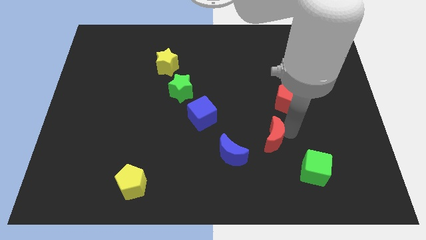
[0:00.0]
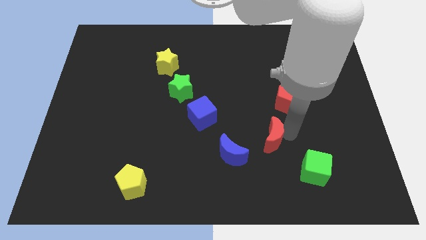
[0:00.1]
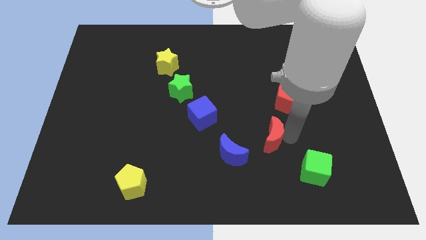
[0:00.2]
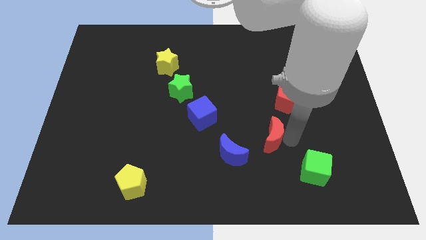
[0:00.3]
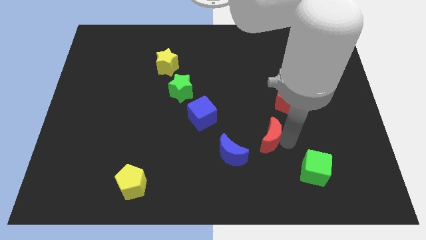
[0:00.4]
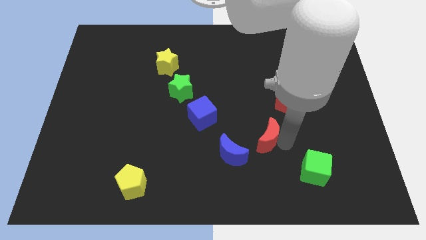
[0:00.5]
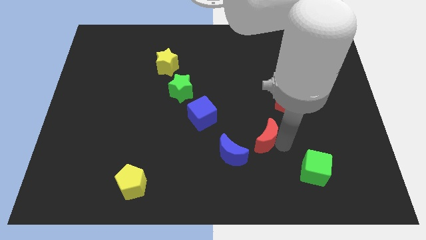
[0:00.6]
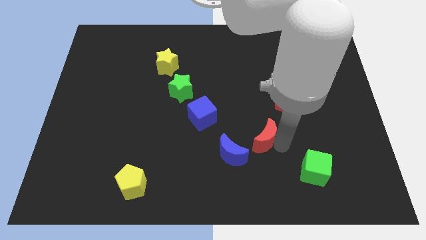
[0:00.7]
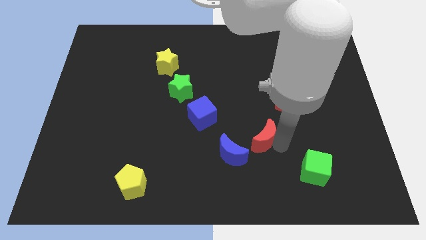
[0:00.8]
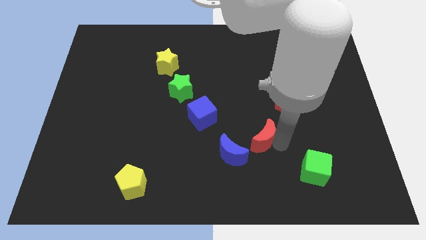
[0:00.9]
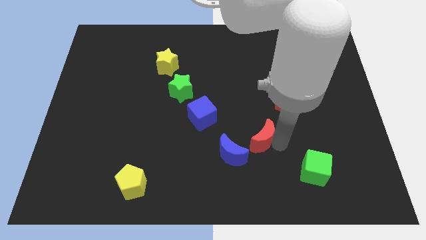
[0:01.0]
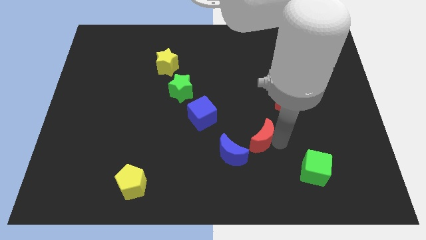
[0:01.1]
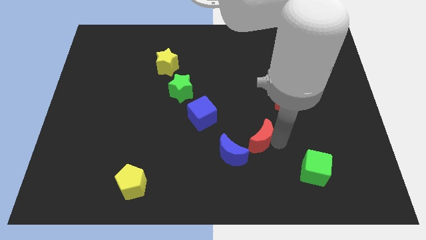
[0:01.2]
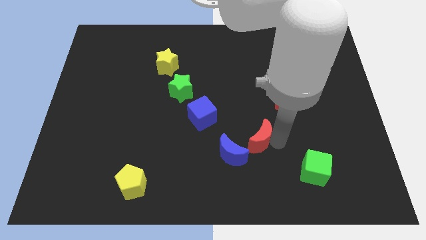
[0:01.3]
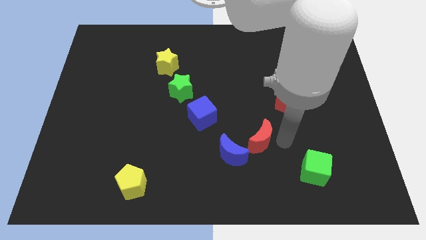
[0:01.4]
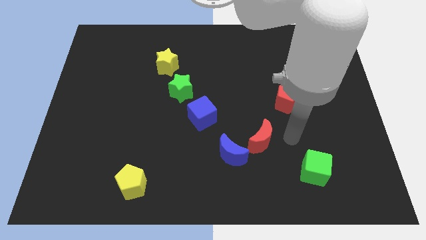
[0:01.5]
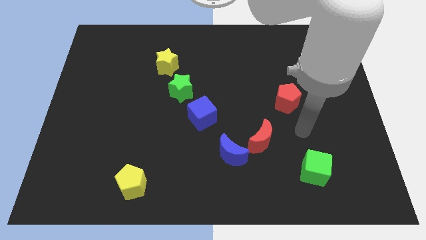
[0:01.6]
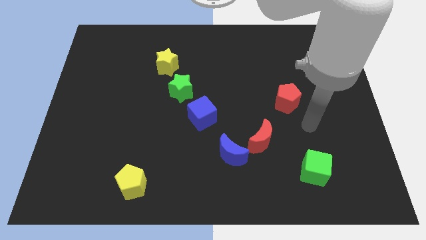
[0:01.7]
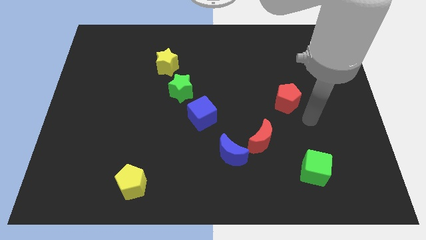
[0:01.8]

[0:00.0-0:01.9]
place the red moon at the right side of the blue crescent

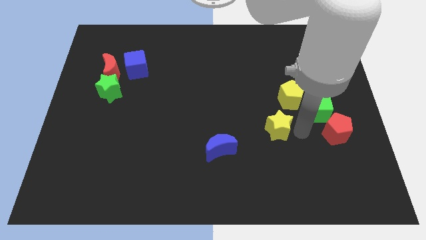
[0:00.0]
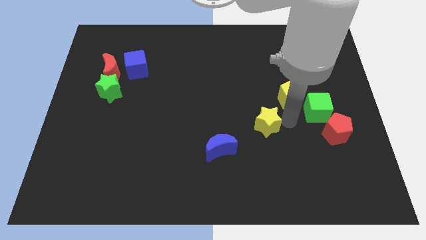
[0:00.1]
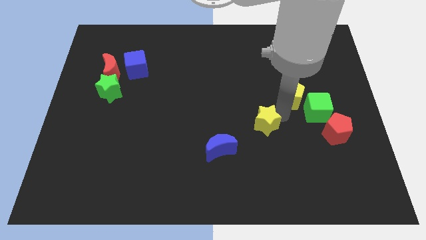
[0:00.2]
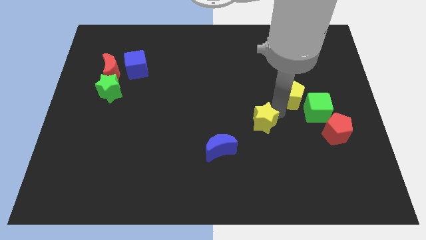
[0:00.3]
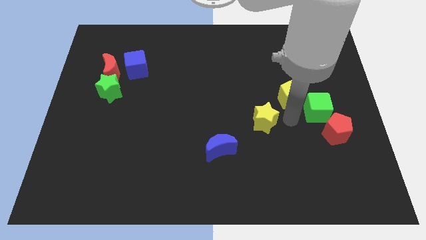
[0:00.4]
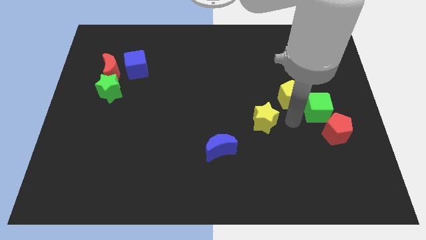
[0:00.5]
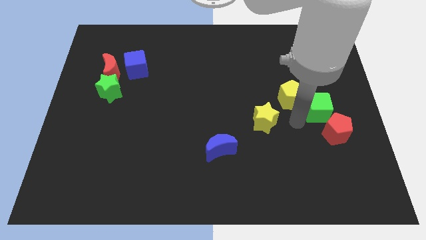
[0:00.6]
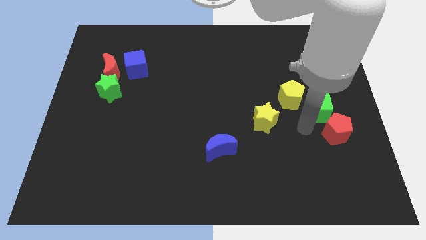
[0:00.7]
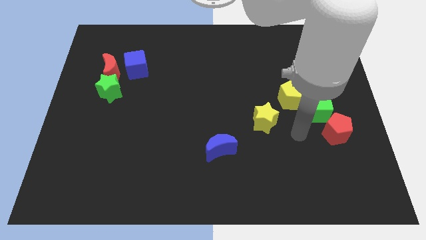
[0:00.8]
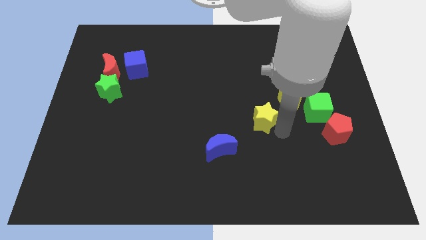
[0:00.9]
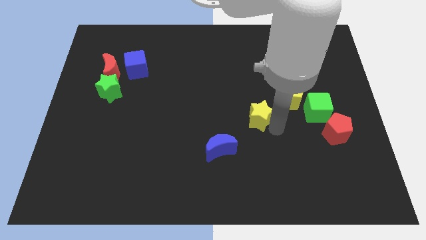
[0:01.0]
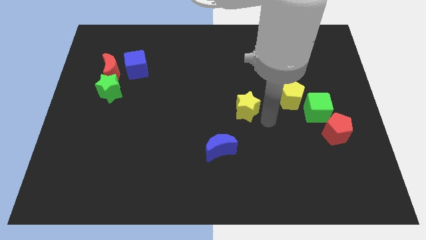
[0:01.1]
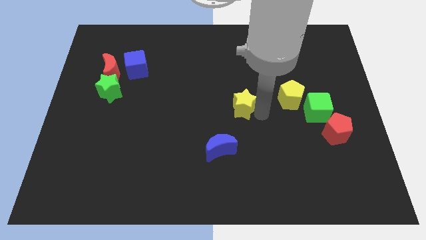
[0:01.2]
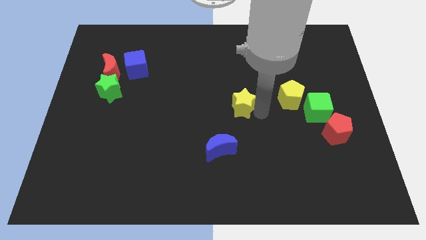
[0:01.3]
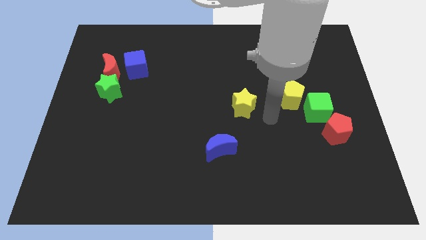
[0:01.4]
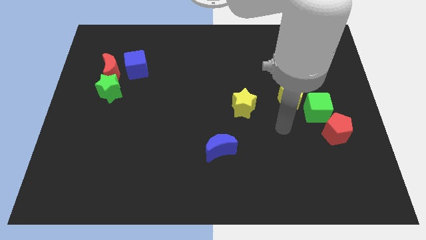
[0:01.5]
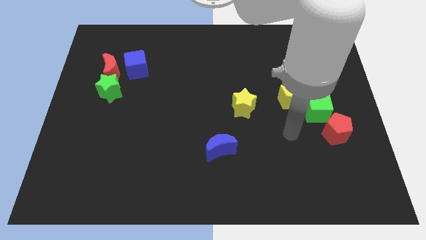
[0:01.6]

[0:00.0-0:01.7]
place the yellow star to the left side of the yellow pentagon

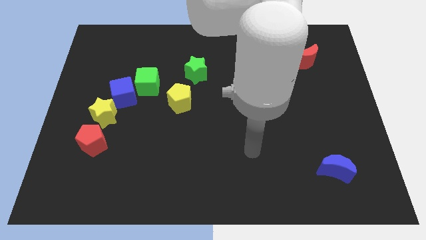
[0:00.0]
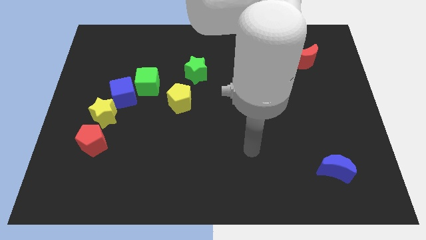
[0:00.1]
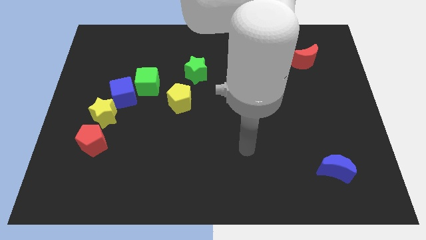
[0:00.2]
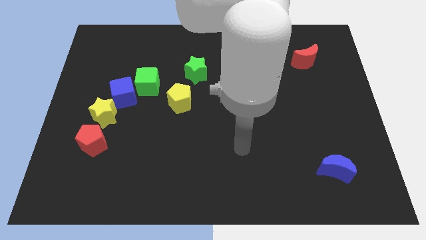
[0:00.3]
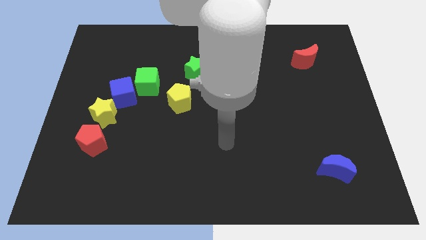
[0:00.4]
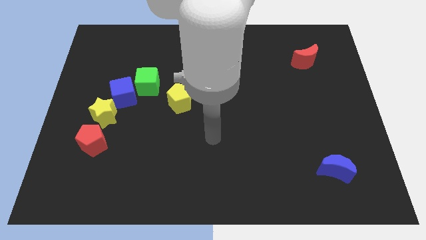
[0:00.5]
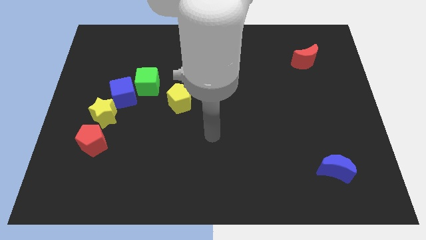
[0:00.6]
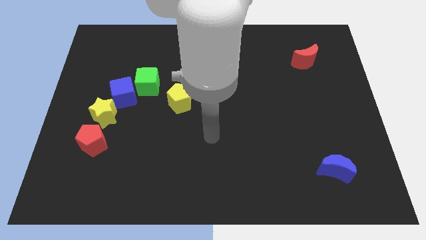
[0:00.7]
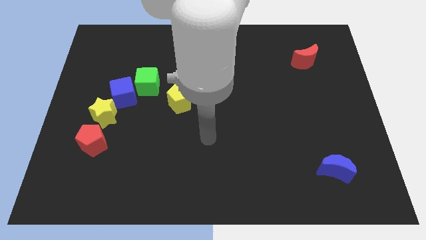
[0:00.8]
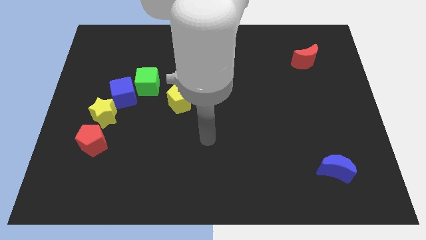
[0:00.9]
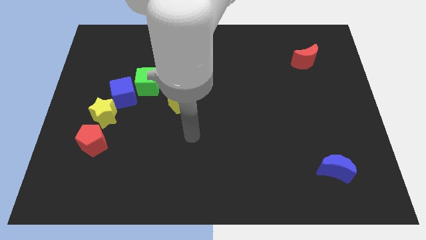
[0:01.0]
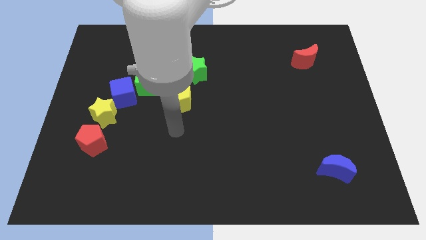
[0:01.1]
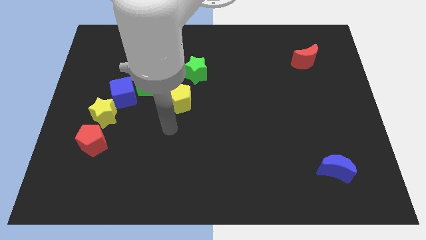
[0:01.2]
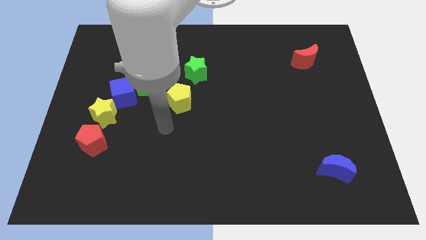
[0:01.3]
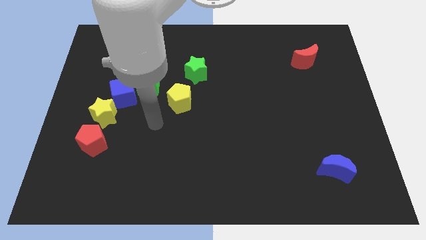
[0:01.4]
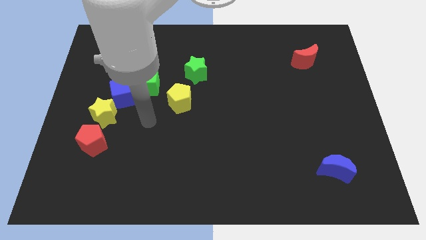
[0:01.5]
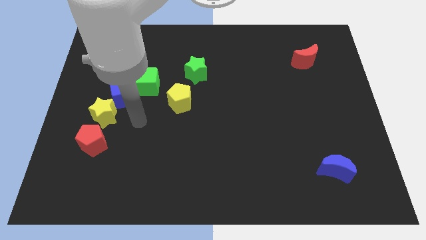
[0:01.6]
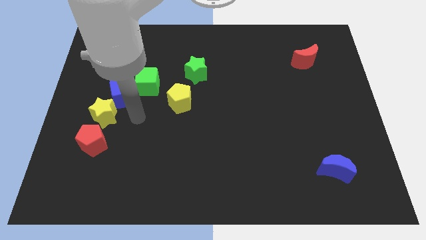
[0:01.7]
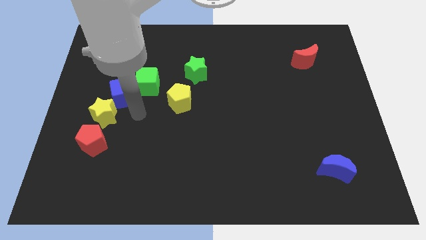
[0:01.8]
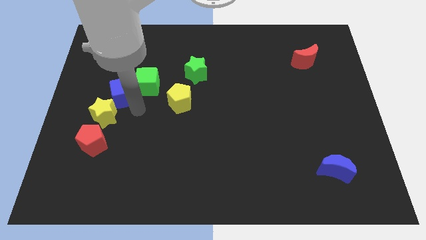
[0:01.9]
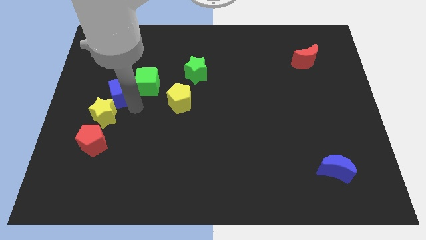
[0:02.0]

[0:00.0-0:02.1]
place your arm right to the blue cube

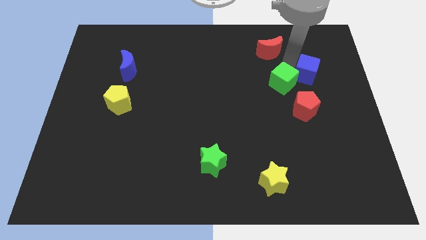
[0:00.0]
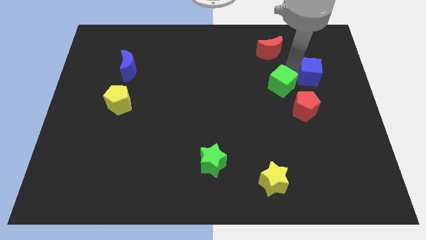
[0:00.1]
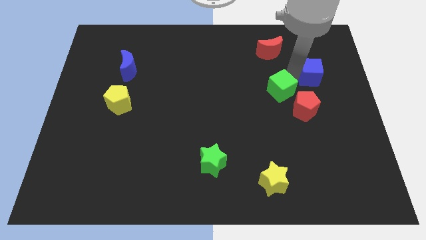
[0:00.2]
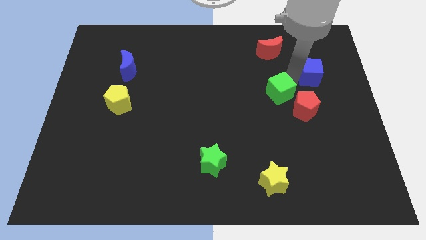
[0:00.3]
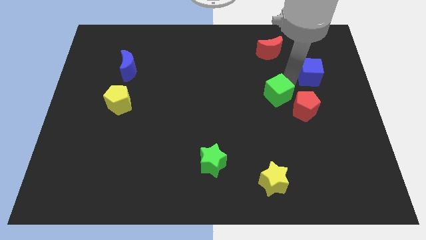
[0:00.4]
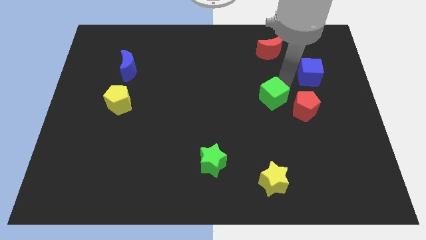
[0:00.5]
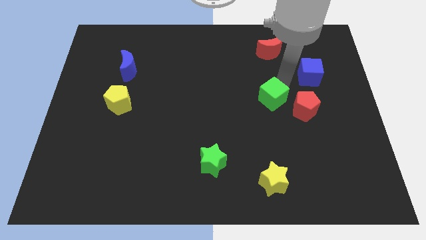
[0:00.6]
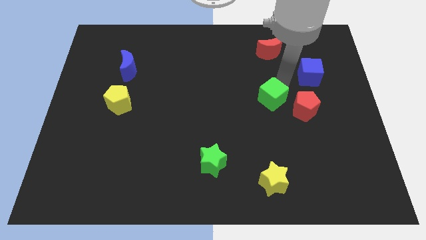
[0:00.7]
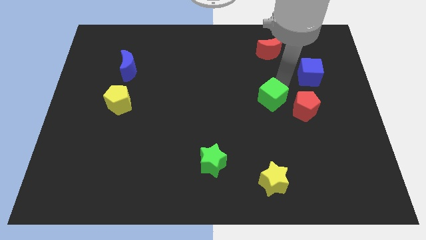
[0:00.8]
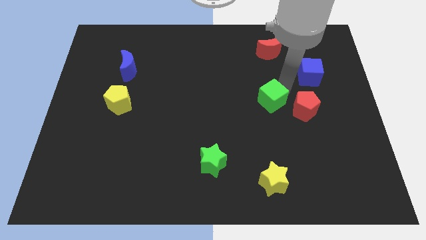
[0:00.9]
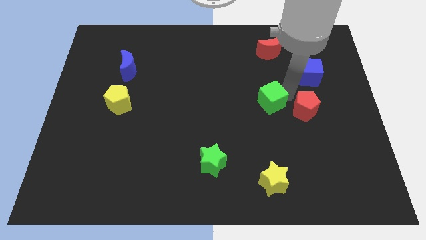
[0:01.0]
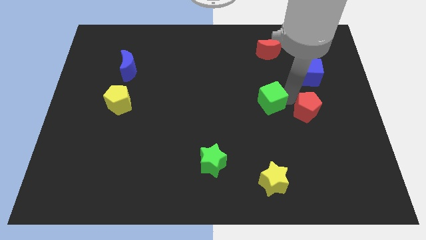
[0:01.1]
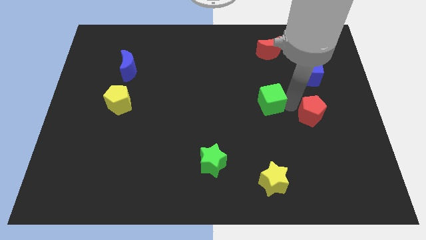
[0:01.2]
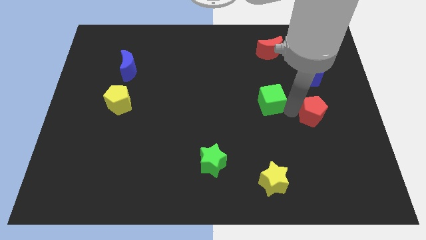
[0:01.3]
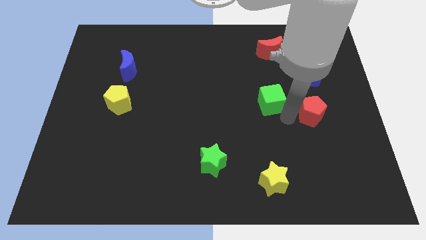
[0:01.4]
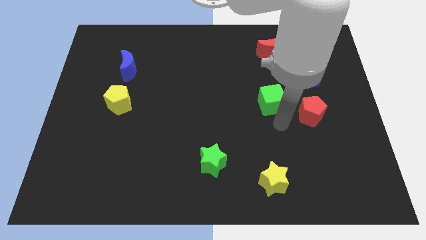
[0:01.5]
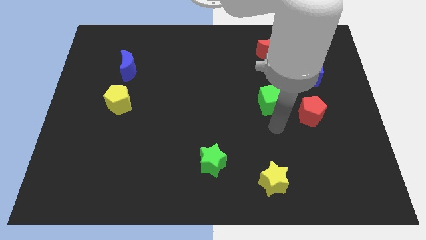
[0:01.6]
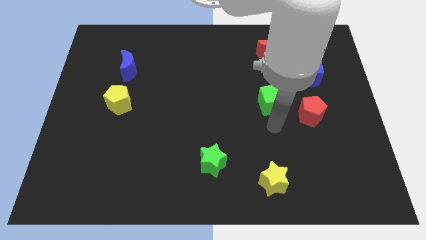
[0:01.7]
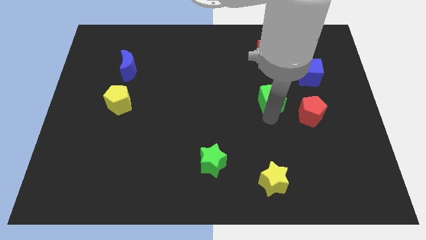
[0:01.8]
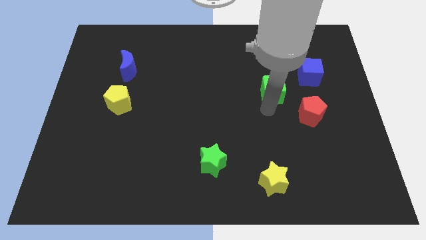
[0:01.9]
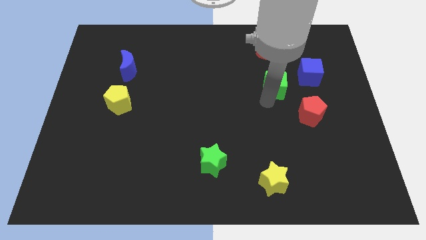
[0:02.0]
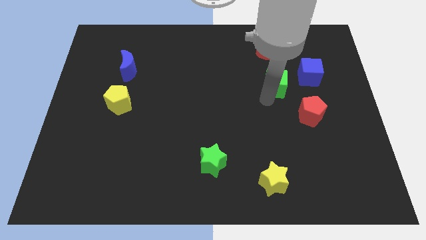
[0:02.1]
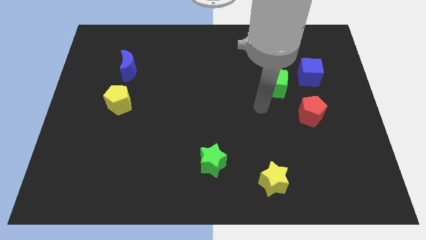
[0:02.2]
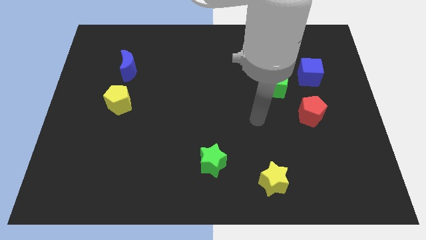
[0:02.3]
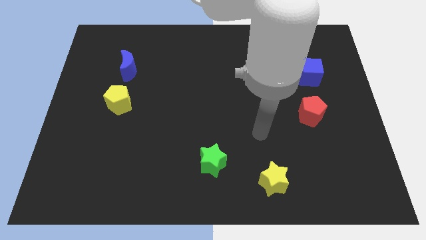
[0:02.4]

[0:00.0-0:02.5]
move the green cube diagonally top left to red pentagon

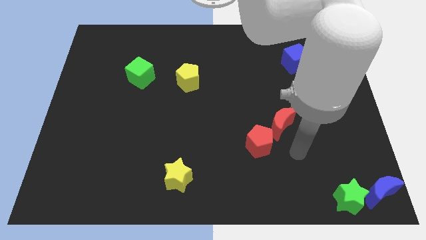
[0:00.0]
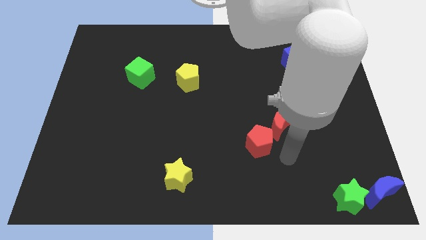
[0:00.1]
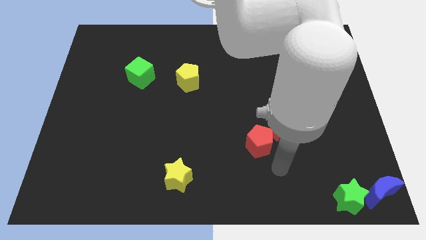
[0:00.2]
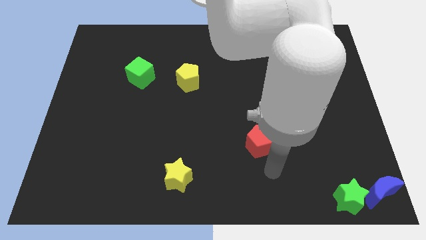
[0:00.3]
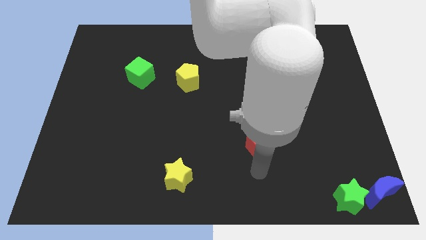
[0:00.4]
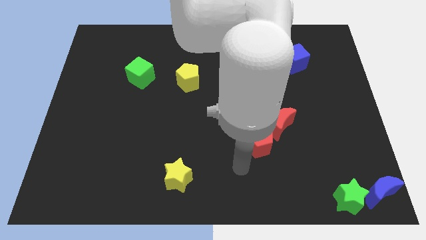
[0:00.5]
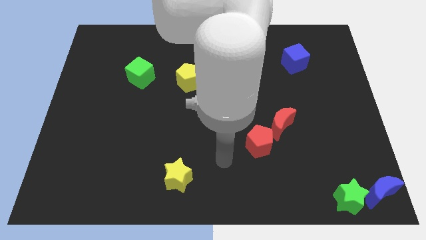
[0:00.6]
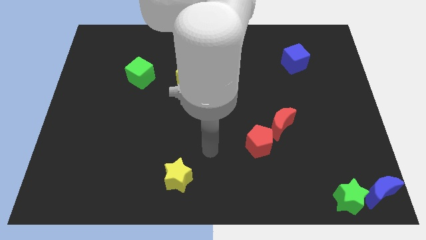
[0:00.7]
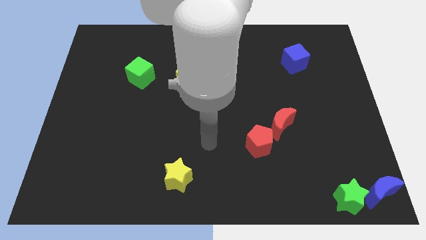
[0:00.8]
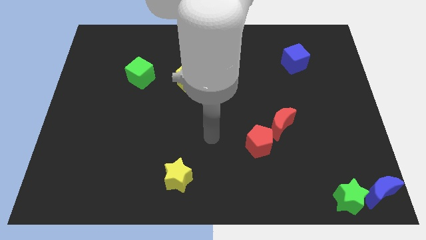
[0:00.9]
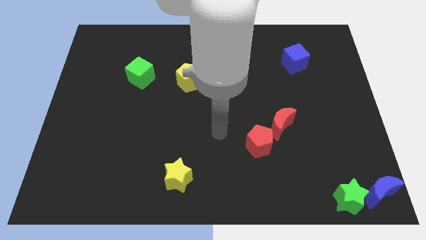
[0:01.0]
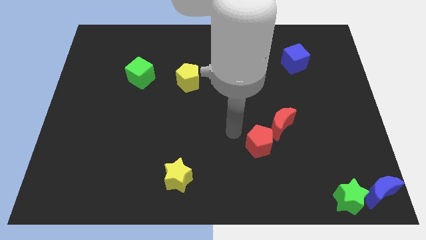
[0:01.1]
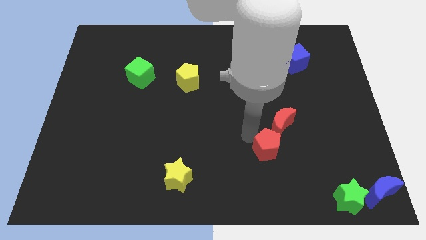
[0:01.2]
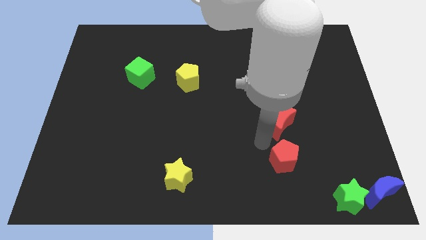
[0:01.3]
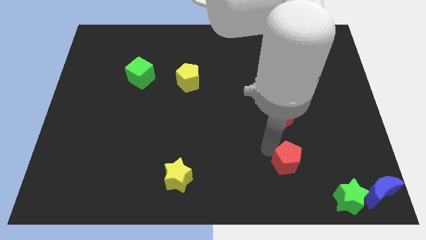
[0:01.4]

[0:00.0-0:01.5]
push the red pentagon to the bottom of the red crescent
